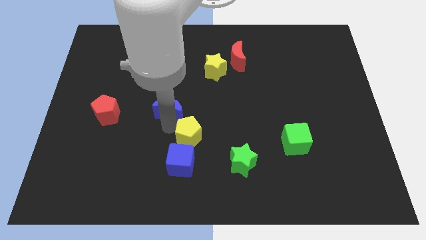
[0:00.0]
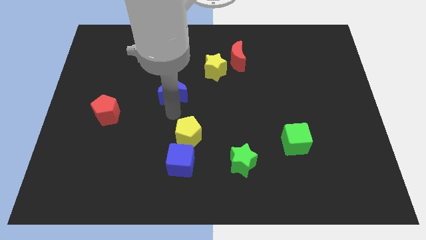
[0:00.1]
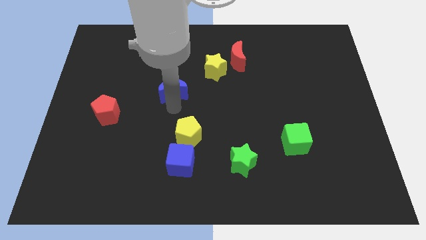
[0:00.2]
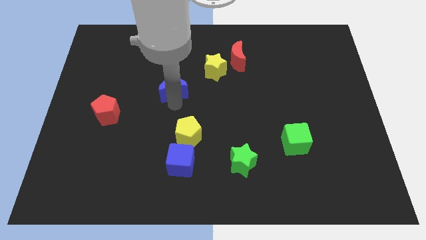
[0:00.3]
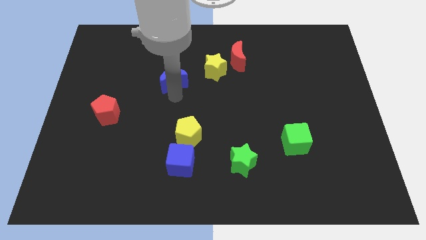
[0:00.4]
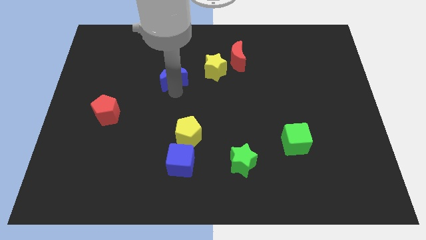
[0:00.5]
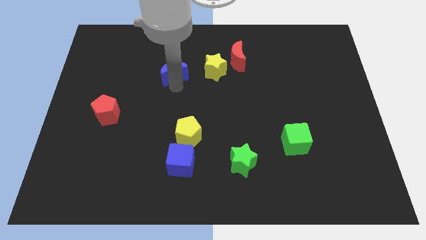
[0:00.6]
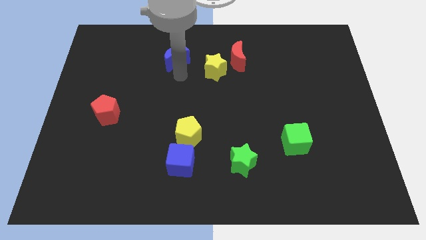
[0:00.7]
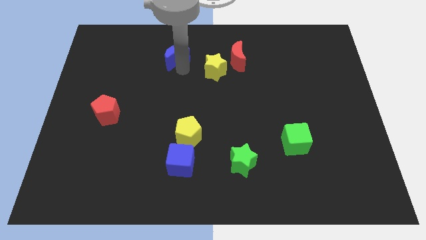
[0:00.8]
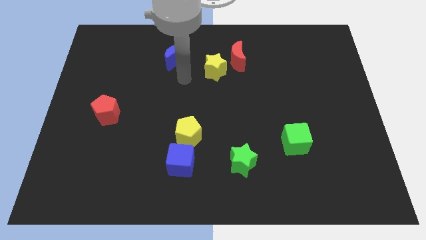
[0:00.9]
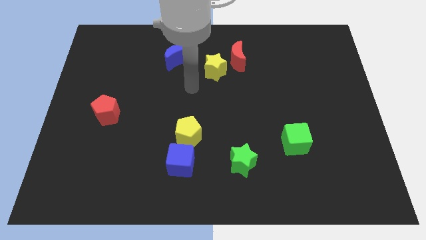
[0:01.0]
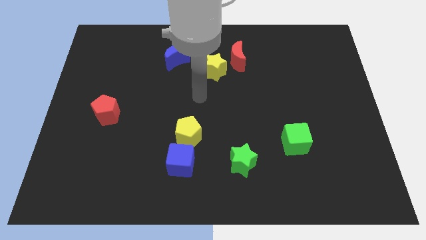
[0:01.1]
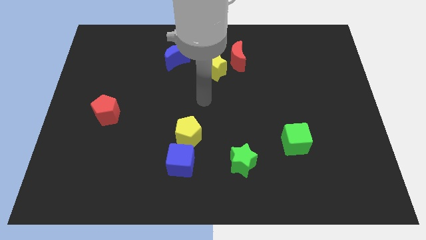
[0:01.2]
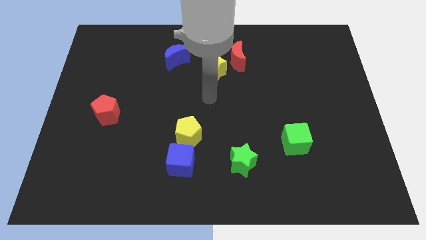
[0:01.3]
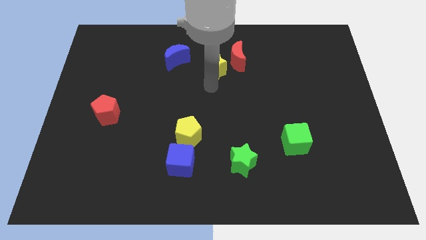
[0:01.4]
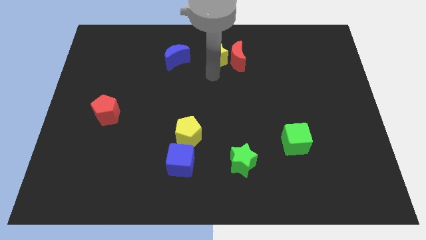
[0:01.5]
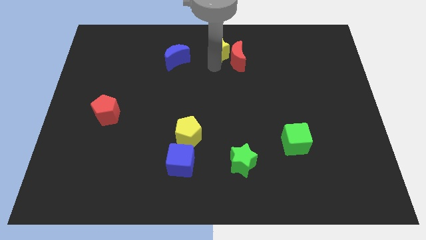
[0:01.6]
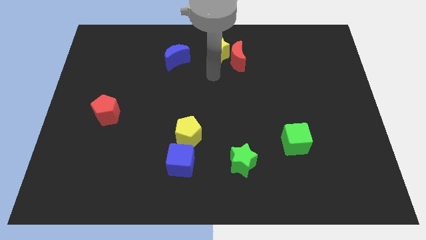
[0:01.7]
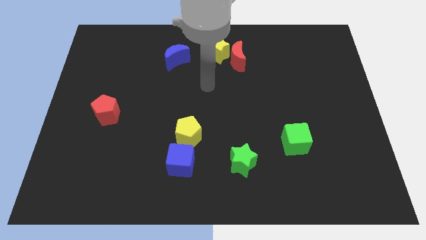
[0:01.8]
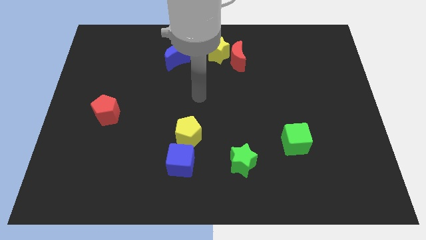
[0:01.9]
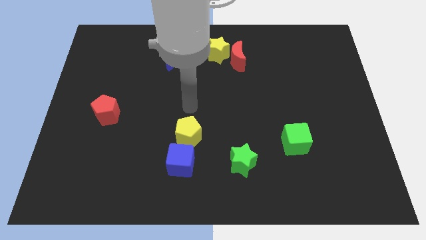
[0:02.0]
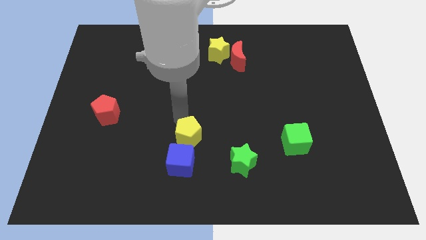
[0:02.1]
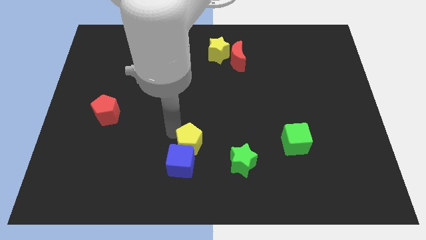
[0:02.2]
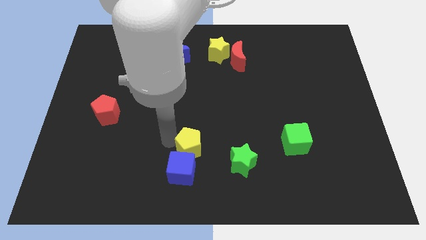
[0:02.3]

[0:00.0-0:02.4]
move the blue crescent along with yellow star to the left of the red crescent

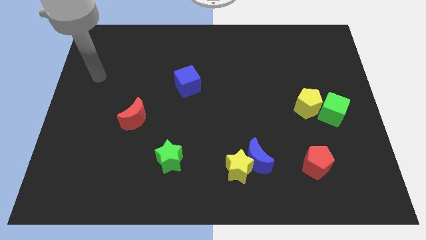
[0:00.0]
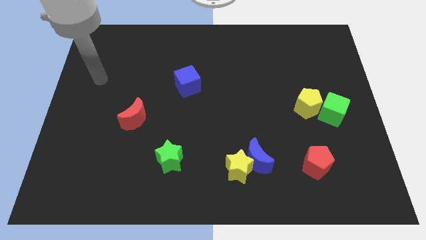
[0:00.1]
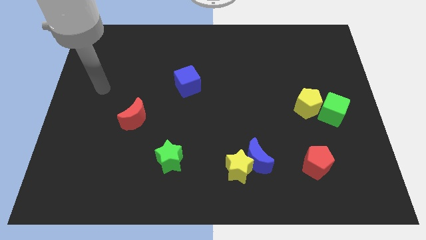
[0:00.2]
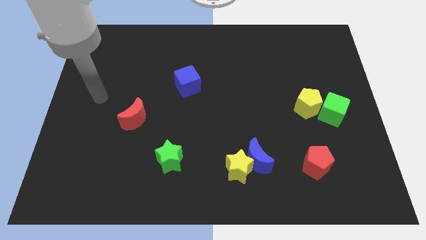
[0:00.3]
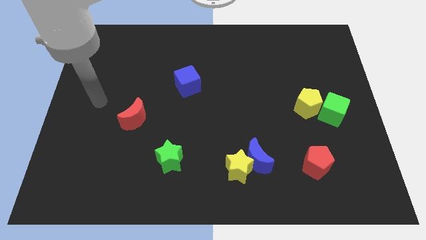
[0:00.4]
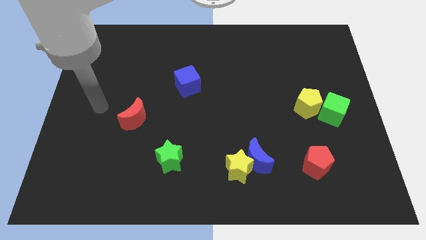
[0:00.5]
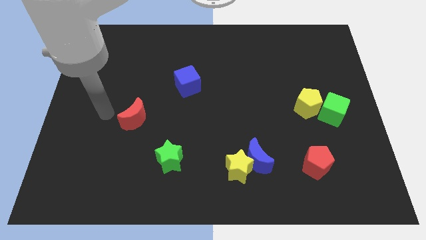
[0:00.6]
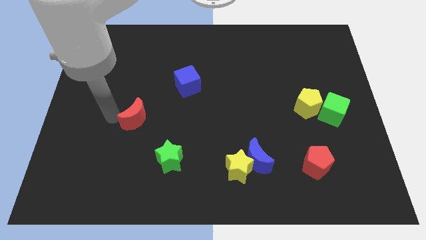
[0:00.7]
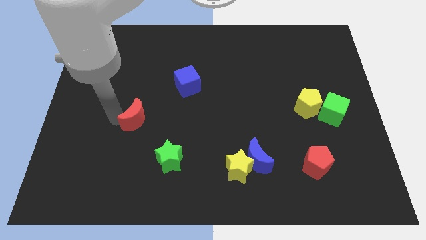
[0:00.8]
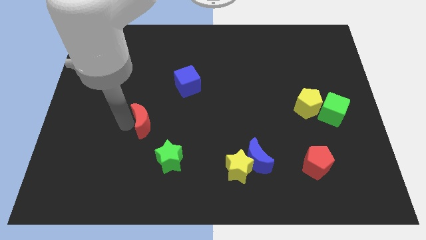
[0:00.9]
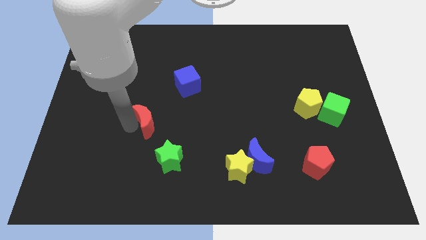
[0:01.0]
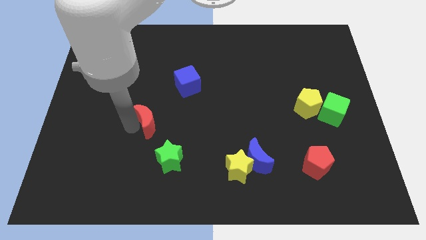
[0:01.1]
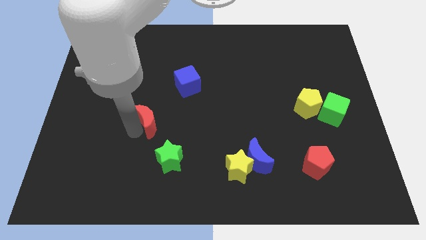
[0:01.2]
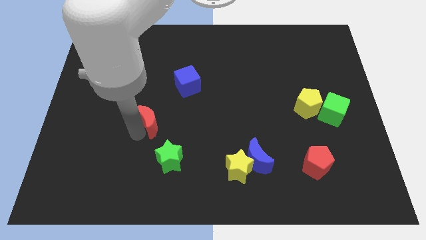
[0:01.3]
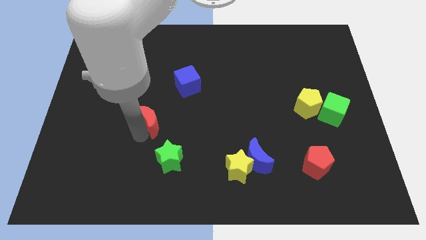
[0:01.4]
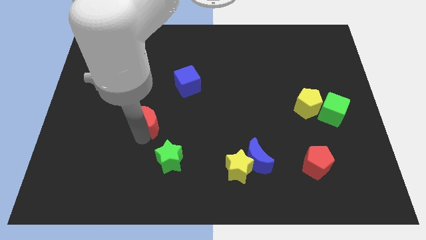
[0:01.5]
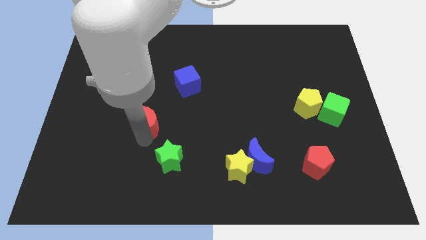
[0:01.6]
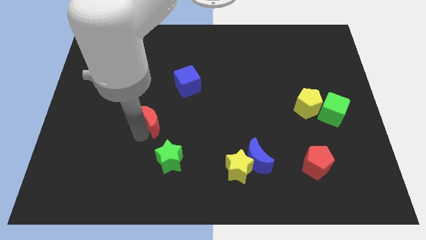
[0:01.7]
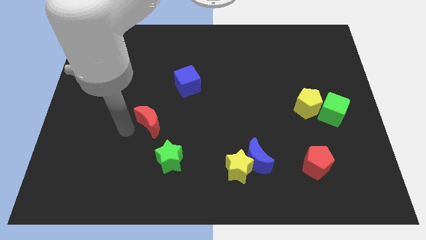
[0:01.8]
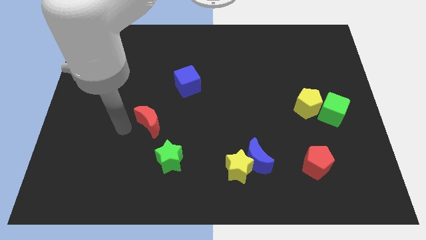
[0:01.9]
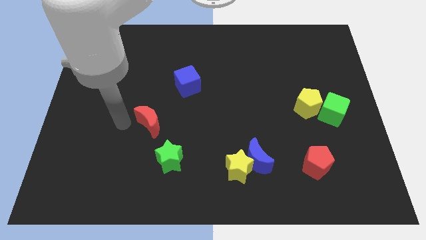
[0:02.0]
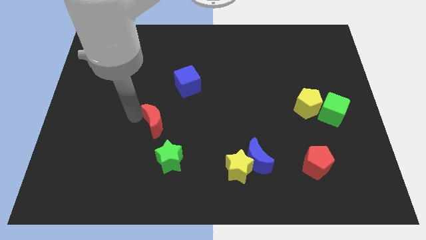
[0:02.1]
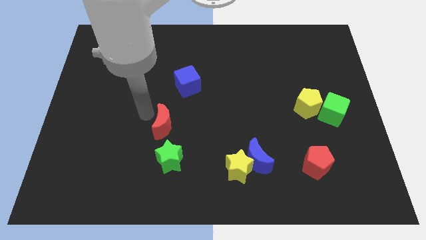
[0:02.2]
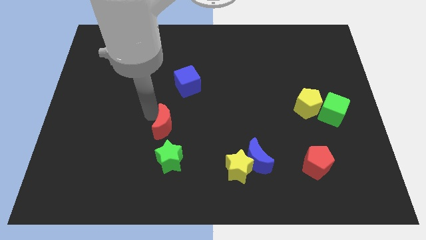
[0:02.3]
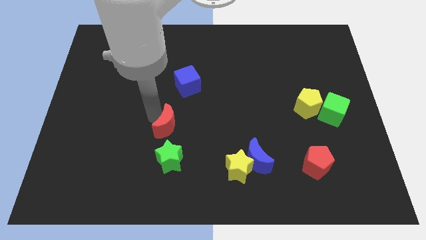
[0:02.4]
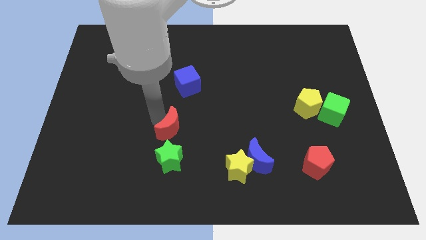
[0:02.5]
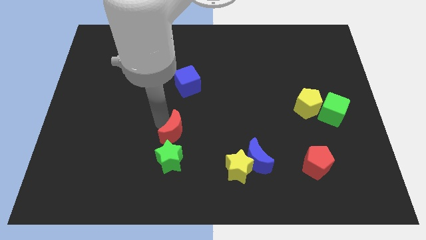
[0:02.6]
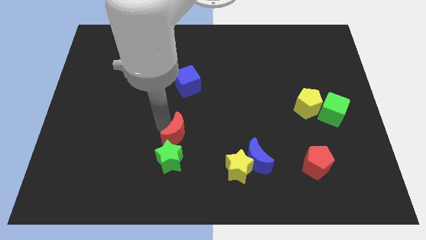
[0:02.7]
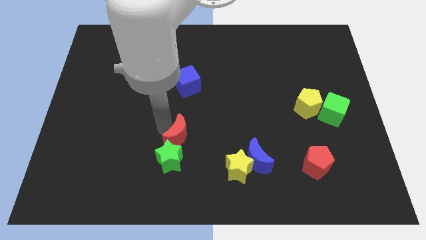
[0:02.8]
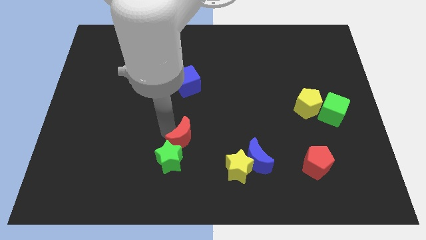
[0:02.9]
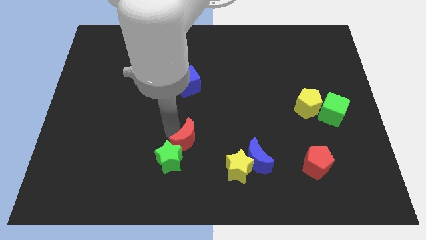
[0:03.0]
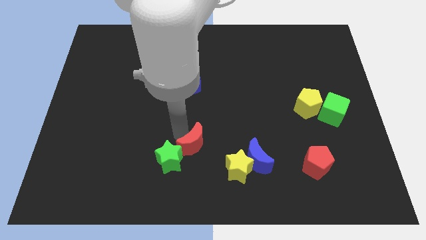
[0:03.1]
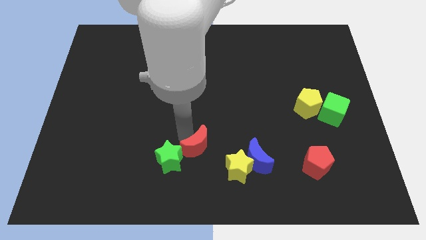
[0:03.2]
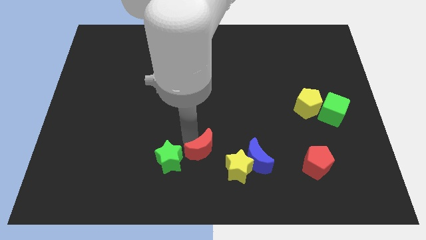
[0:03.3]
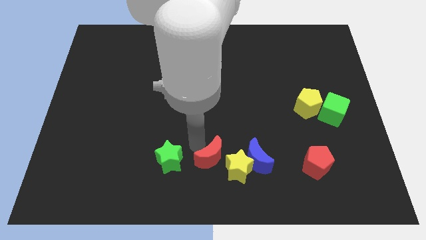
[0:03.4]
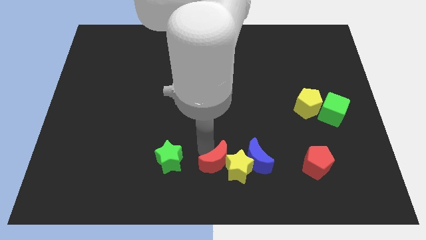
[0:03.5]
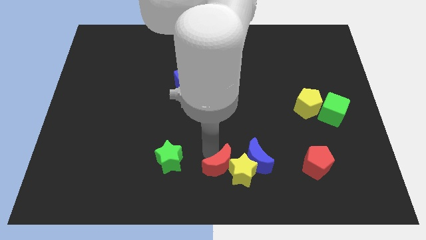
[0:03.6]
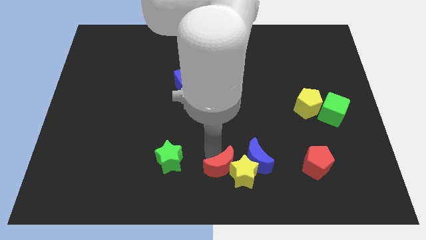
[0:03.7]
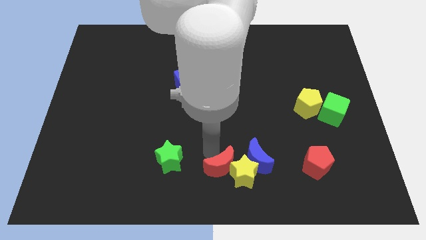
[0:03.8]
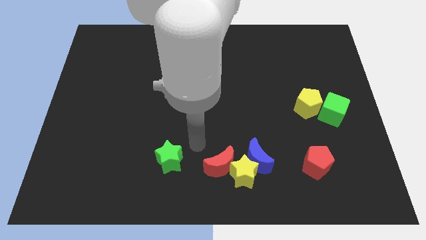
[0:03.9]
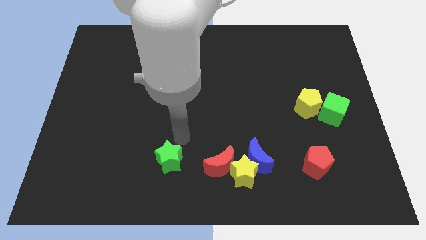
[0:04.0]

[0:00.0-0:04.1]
move the red crescent to the left of the yellow star

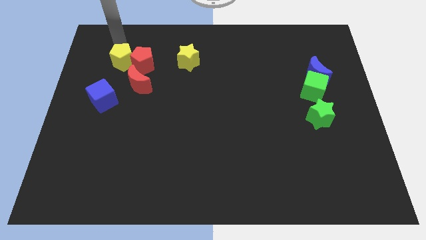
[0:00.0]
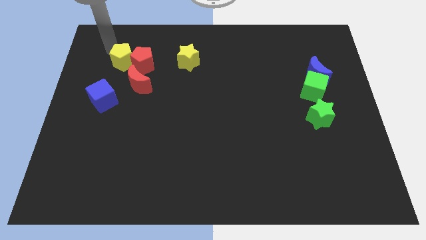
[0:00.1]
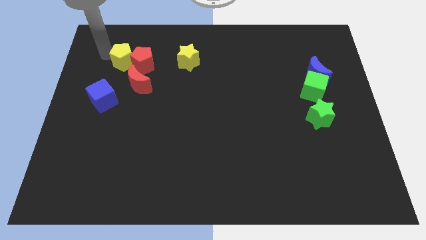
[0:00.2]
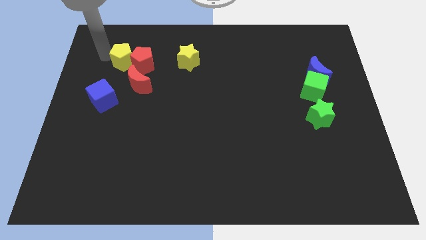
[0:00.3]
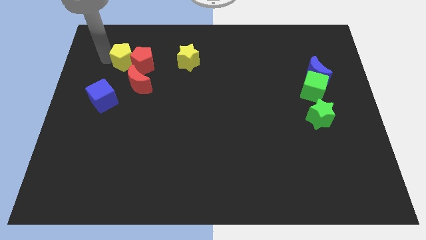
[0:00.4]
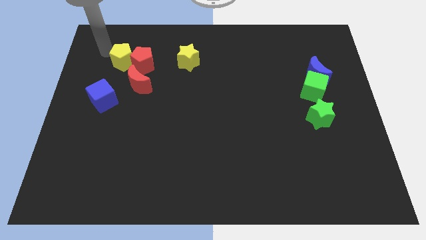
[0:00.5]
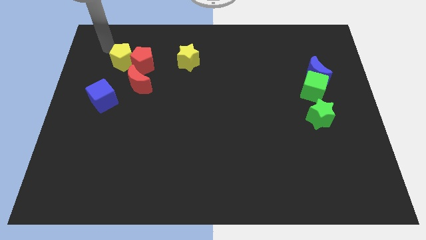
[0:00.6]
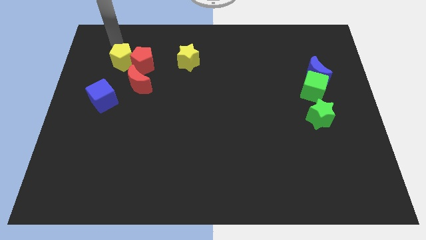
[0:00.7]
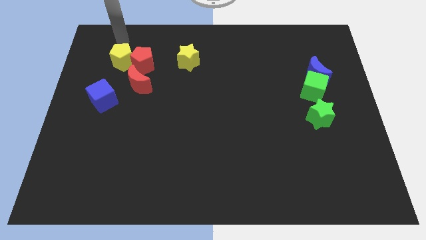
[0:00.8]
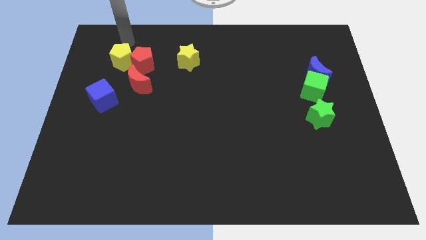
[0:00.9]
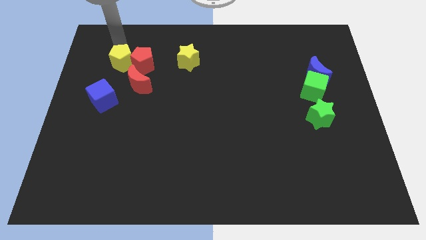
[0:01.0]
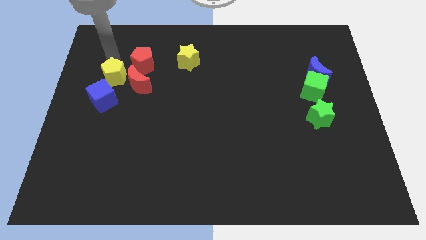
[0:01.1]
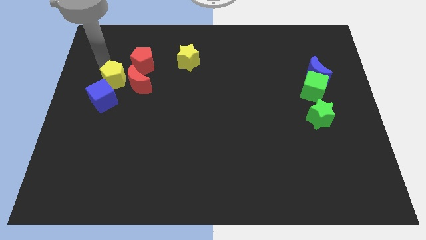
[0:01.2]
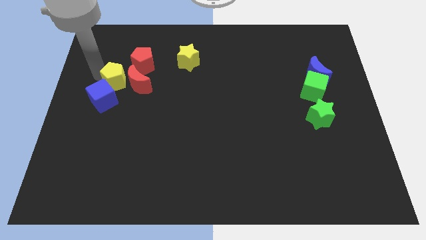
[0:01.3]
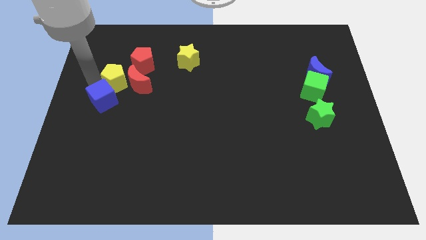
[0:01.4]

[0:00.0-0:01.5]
separate yellow pentagon from red pentagon

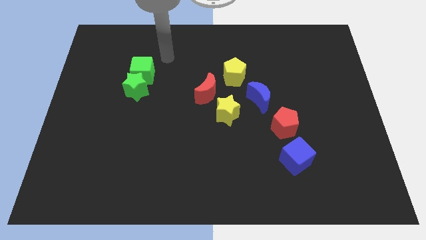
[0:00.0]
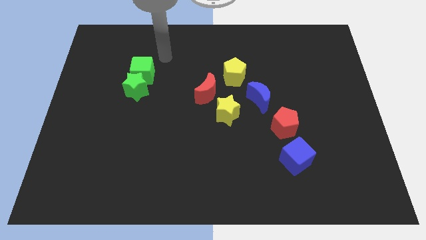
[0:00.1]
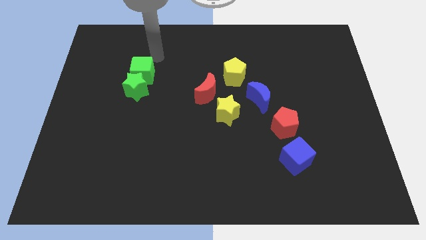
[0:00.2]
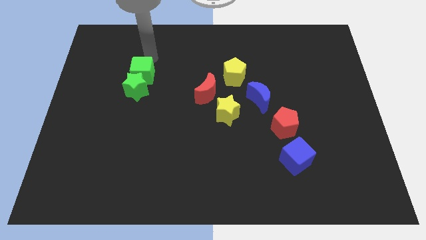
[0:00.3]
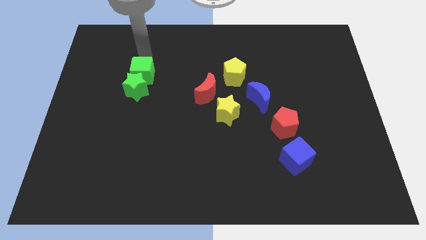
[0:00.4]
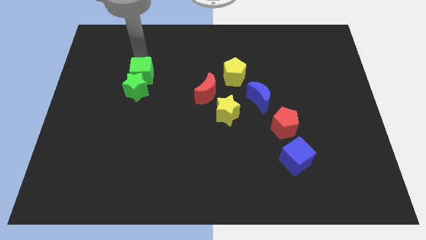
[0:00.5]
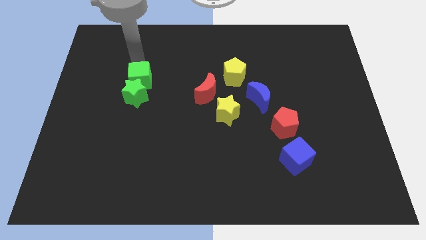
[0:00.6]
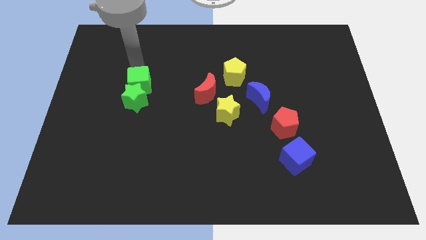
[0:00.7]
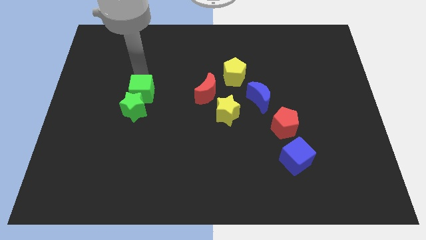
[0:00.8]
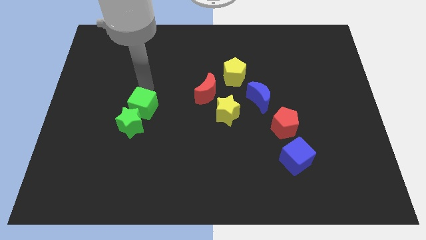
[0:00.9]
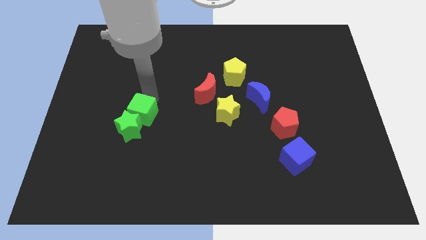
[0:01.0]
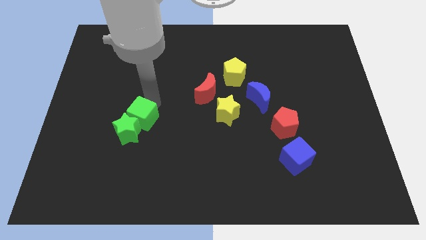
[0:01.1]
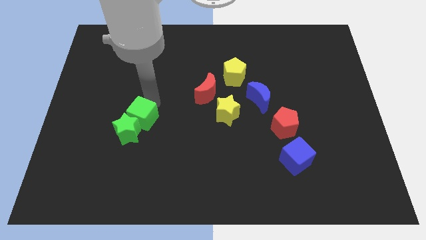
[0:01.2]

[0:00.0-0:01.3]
push the green blocks towards the bottom left
